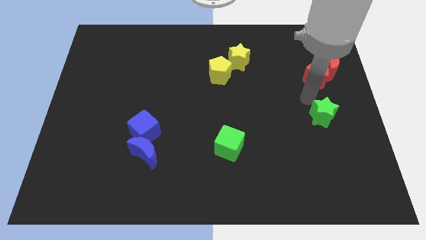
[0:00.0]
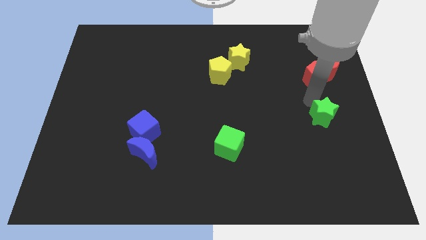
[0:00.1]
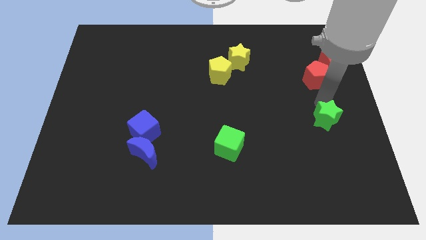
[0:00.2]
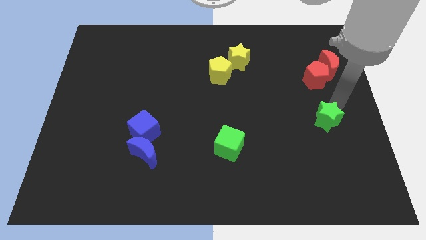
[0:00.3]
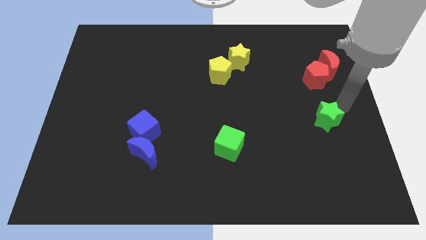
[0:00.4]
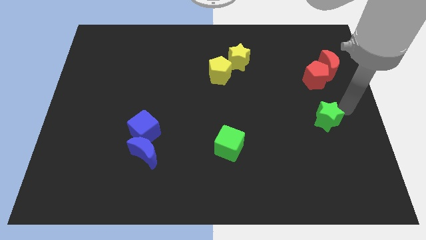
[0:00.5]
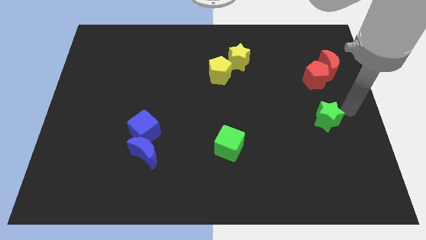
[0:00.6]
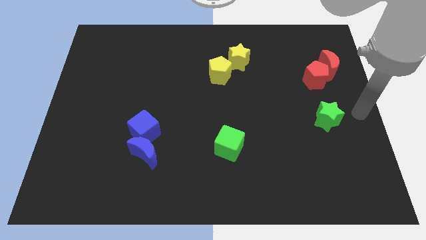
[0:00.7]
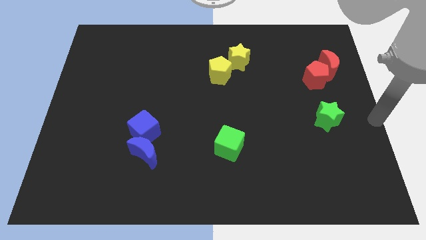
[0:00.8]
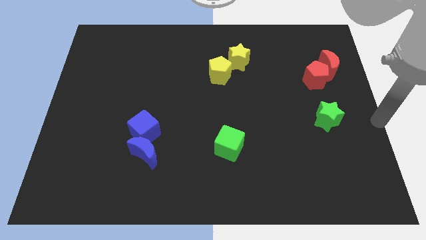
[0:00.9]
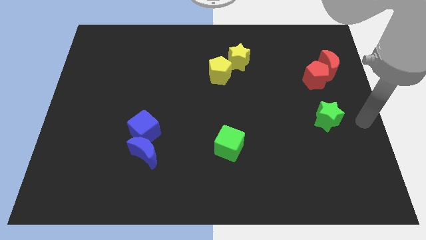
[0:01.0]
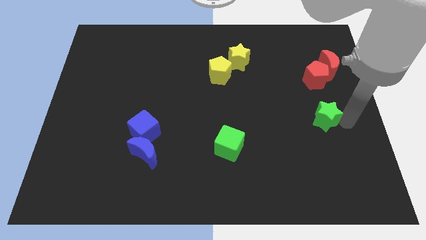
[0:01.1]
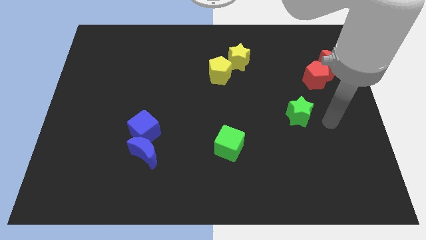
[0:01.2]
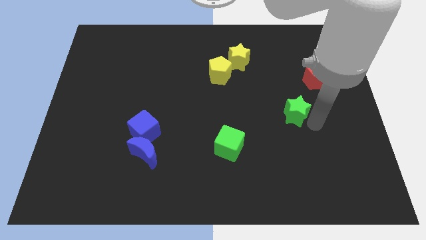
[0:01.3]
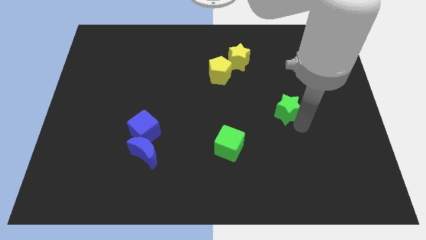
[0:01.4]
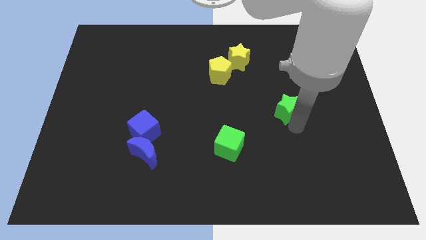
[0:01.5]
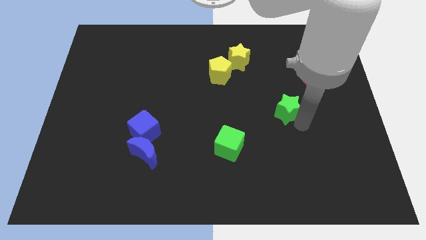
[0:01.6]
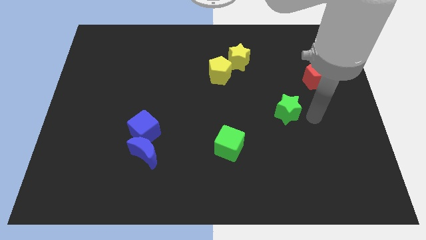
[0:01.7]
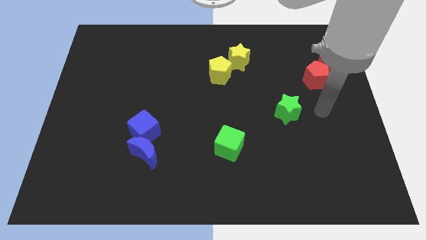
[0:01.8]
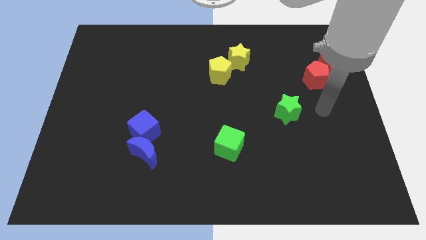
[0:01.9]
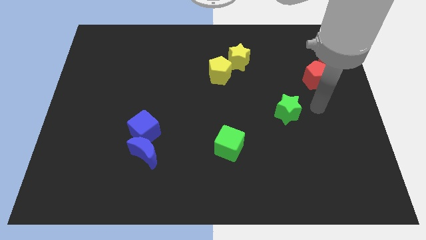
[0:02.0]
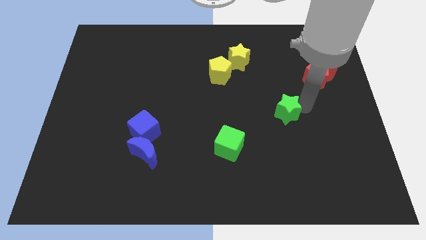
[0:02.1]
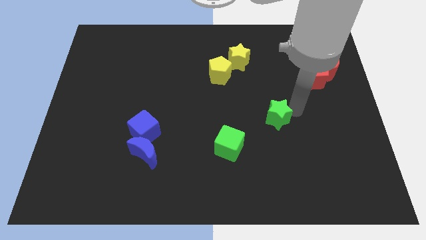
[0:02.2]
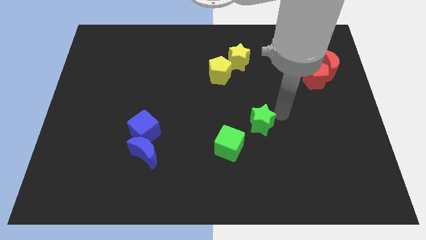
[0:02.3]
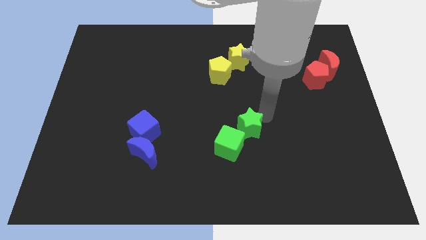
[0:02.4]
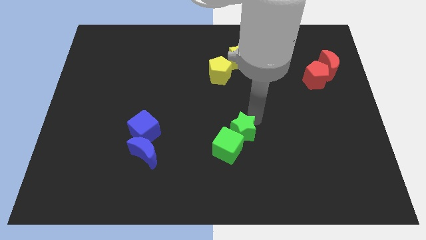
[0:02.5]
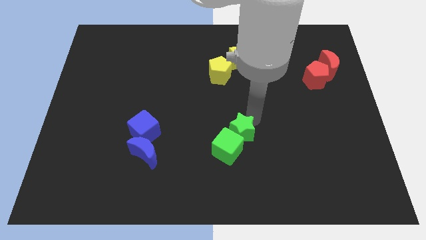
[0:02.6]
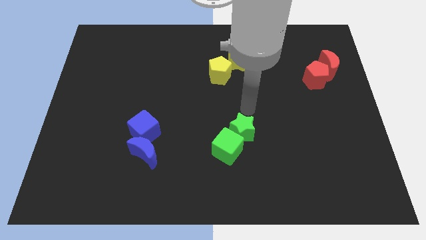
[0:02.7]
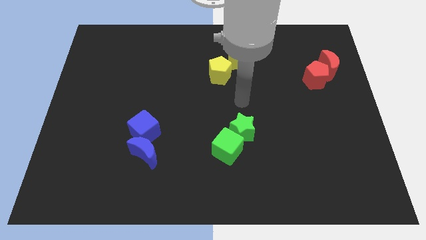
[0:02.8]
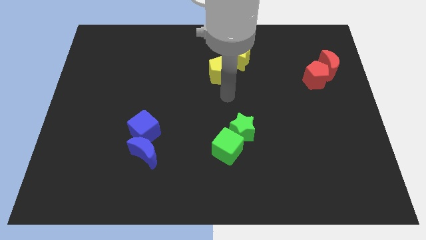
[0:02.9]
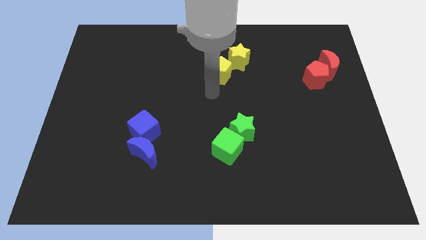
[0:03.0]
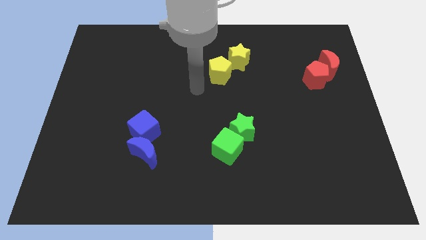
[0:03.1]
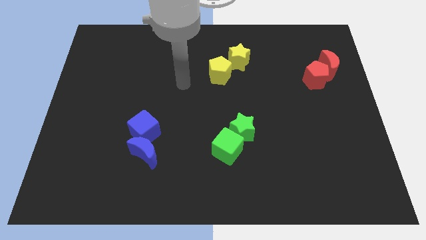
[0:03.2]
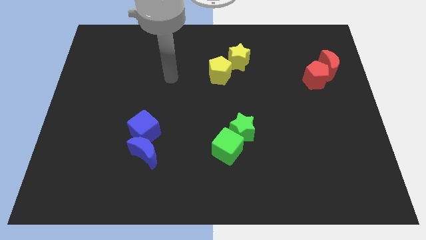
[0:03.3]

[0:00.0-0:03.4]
push the green star into green cube

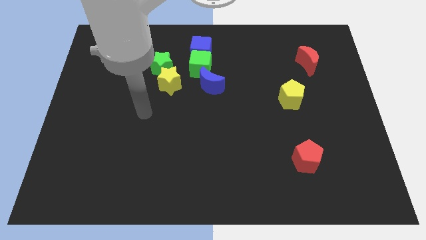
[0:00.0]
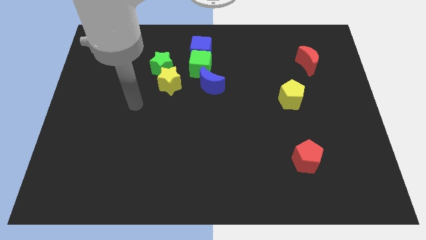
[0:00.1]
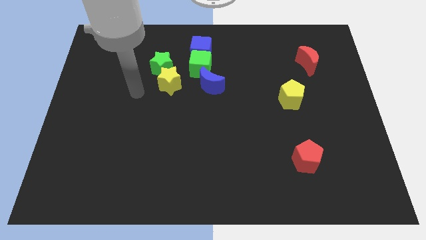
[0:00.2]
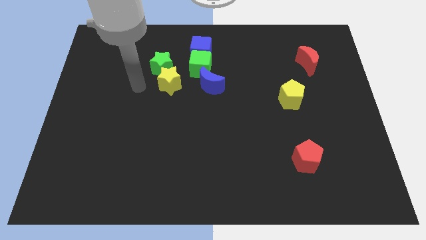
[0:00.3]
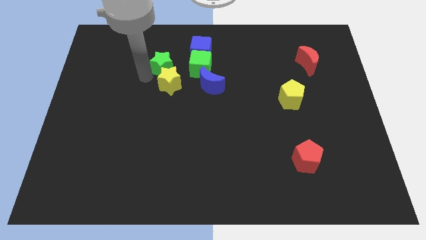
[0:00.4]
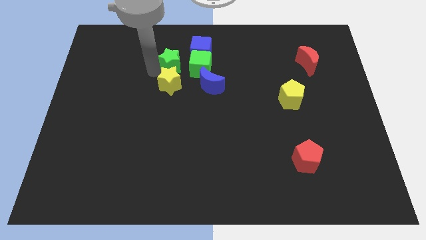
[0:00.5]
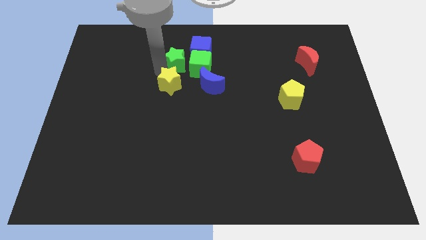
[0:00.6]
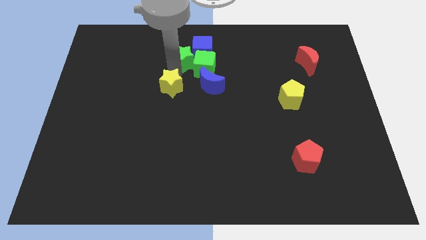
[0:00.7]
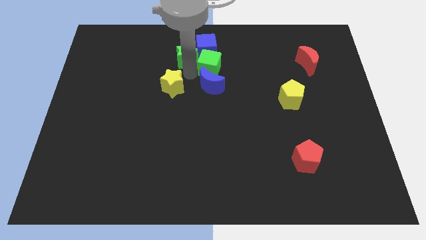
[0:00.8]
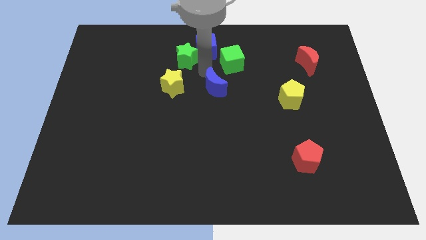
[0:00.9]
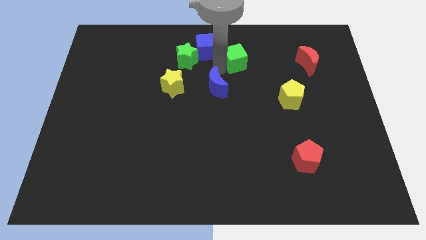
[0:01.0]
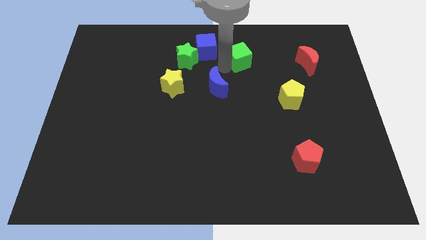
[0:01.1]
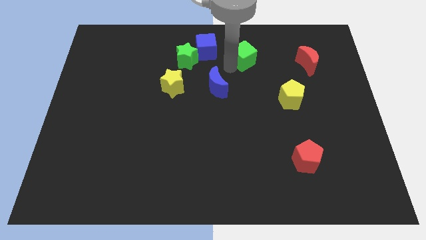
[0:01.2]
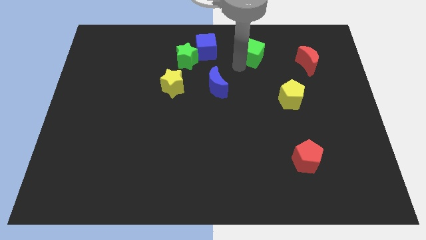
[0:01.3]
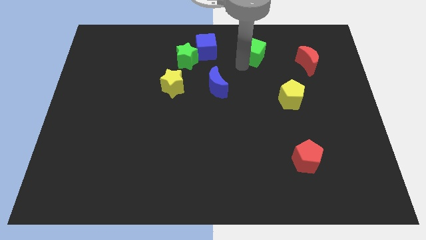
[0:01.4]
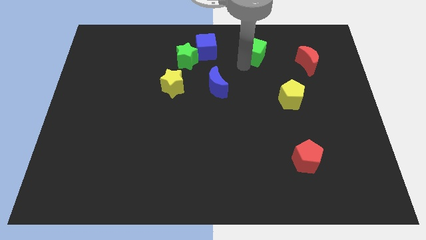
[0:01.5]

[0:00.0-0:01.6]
place the green cube between the blue cube and red moon

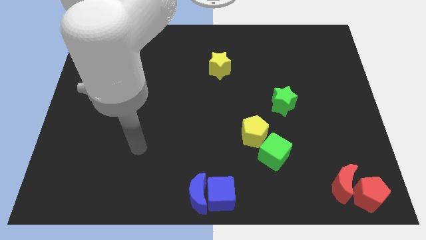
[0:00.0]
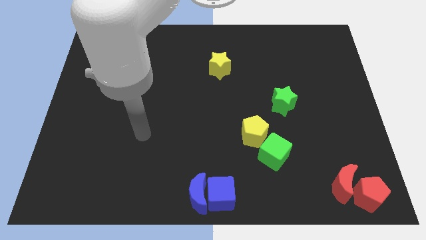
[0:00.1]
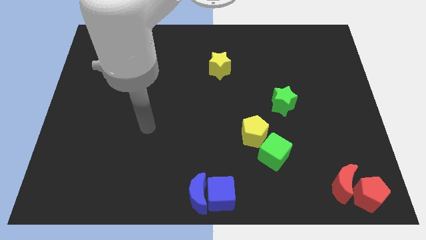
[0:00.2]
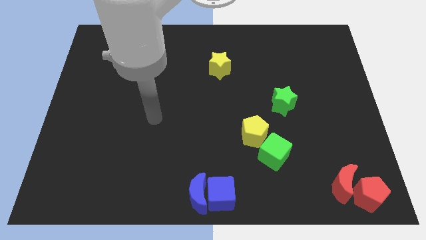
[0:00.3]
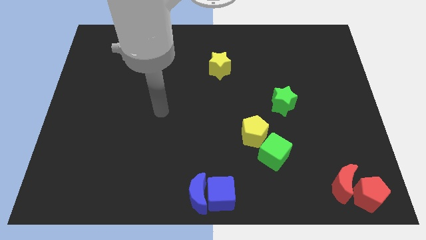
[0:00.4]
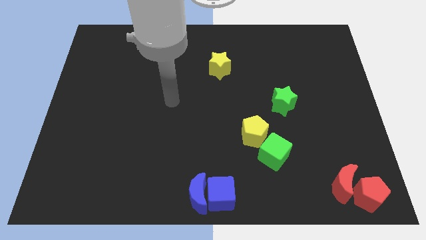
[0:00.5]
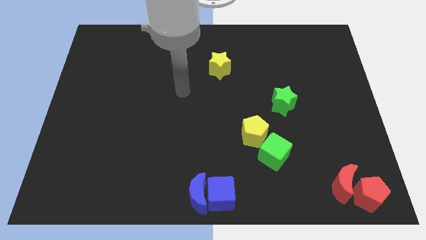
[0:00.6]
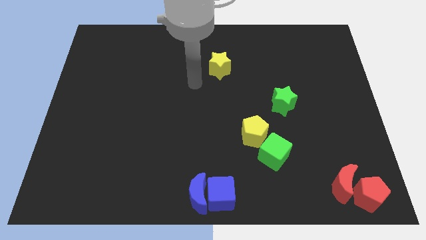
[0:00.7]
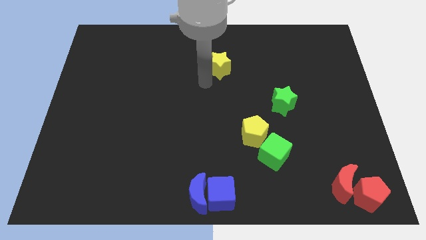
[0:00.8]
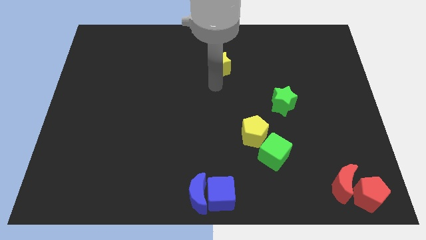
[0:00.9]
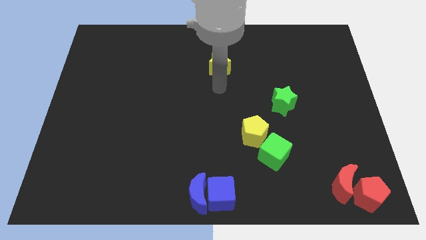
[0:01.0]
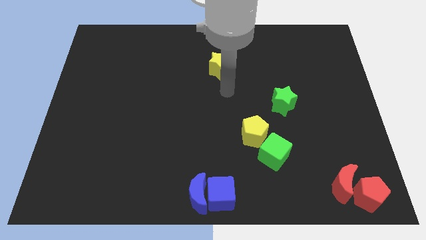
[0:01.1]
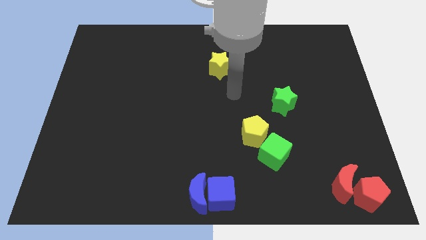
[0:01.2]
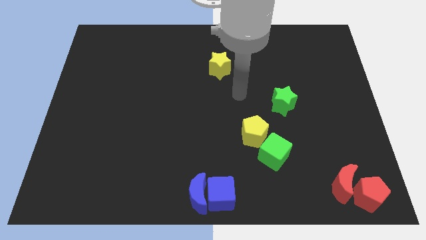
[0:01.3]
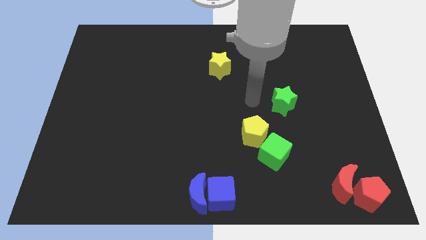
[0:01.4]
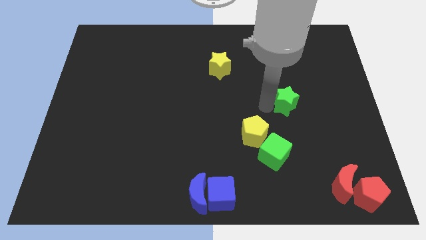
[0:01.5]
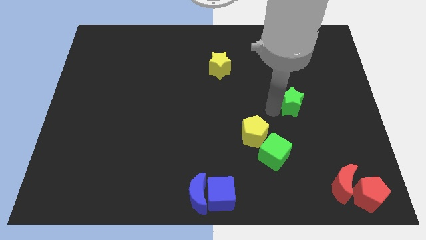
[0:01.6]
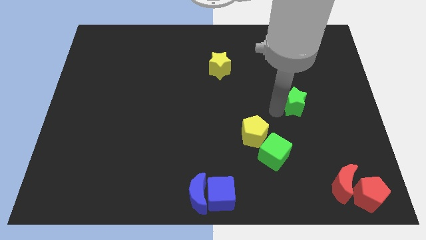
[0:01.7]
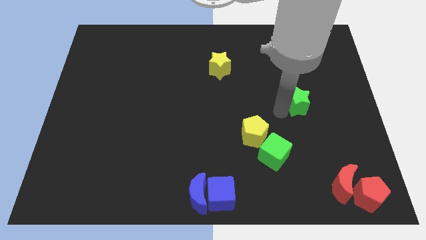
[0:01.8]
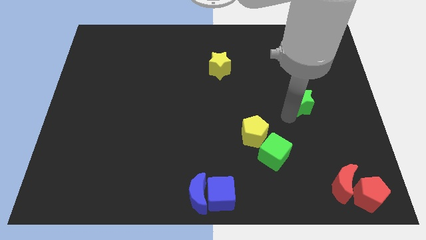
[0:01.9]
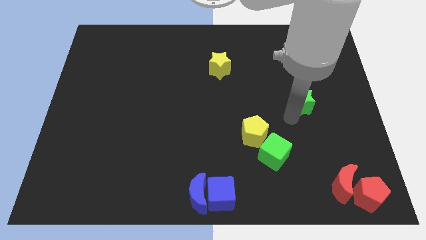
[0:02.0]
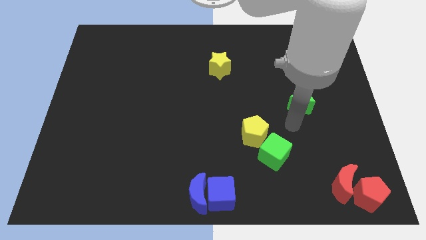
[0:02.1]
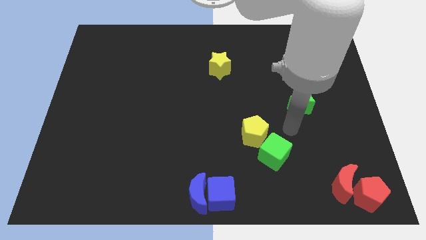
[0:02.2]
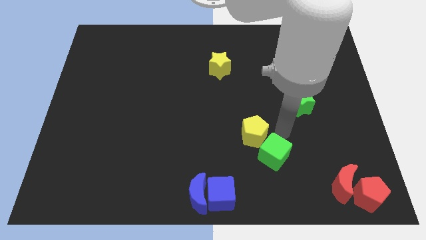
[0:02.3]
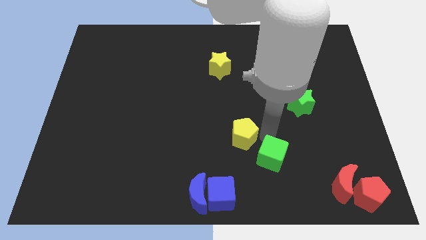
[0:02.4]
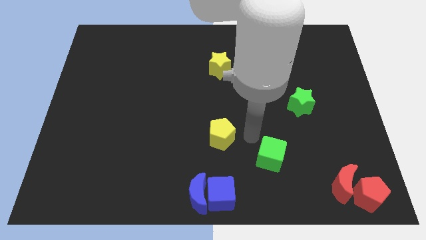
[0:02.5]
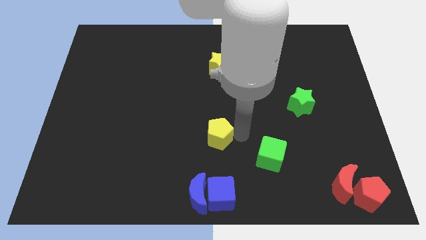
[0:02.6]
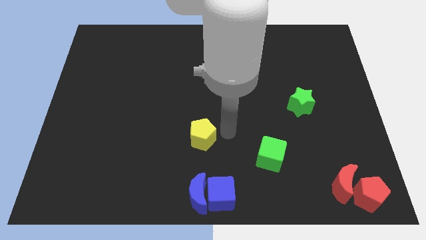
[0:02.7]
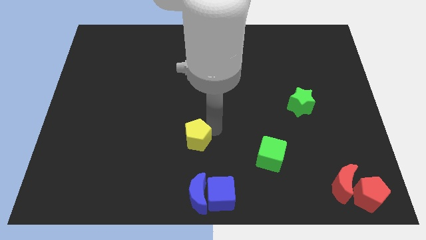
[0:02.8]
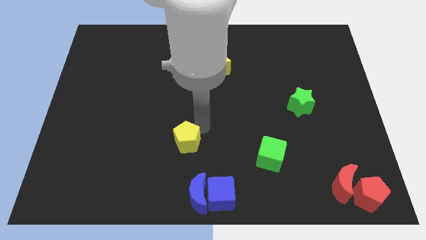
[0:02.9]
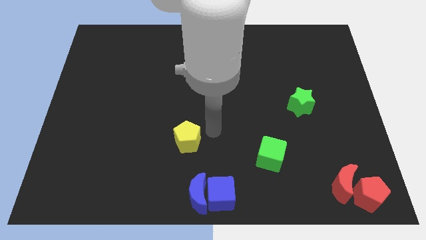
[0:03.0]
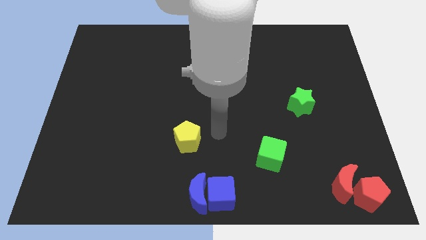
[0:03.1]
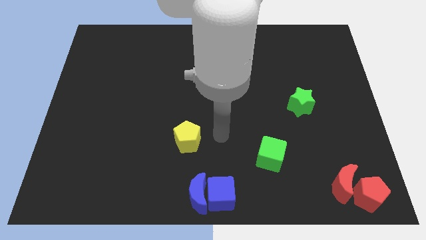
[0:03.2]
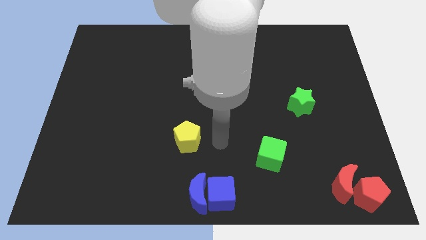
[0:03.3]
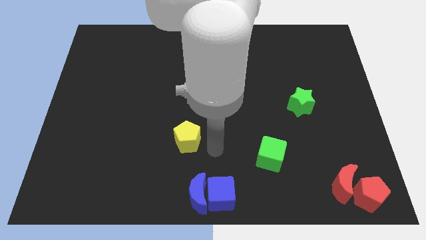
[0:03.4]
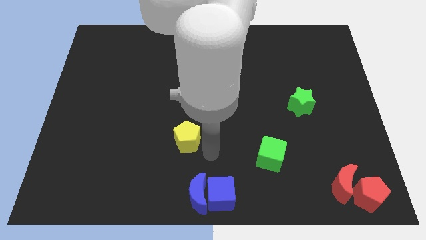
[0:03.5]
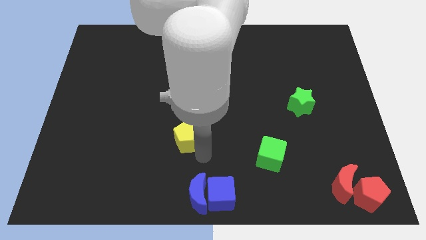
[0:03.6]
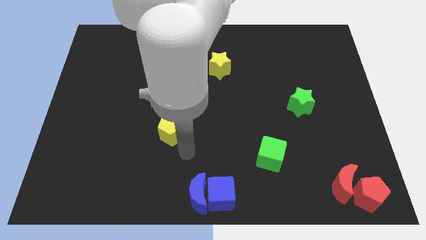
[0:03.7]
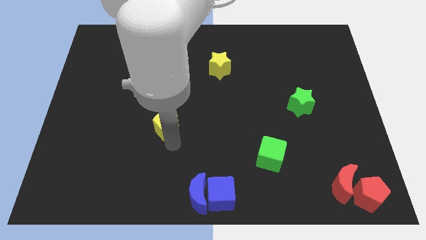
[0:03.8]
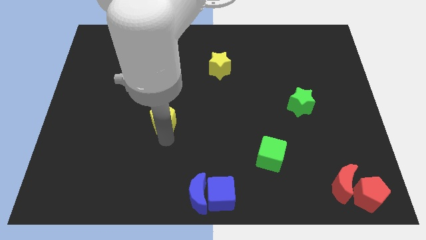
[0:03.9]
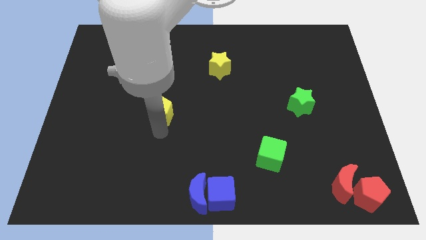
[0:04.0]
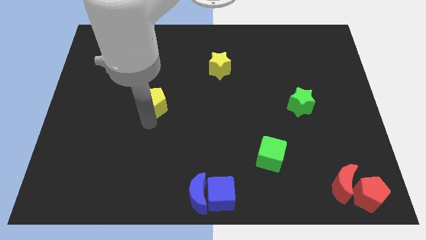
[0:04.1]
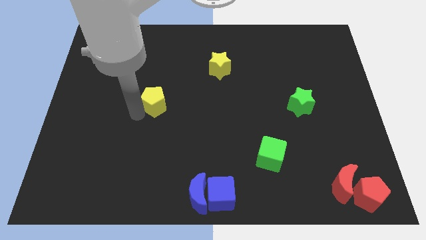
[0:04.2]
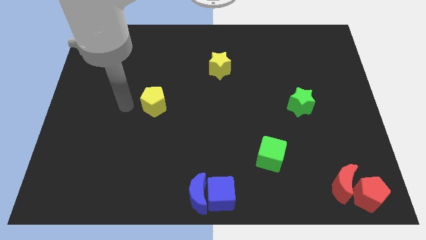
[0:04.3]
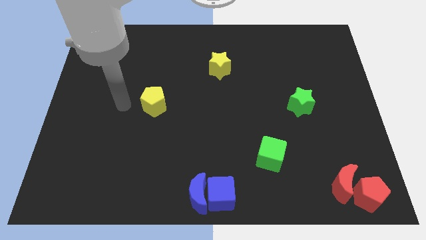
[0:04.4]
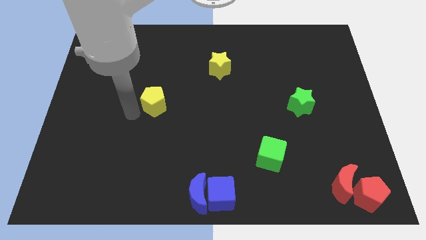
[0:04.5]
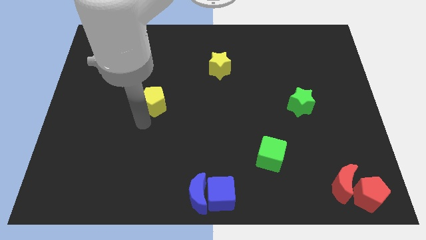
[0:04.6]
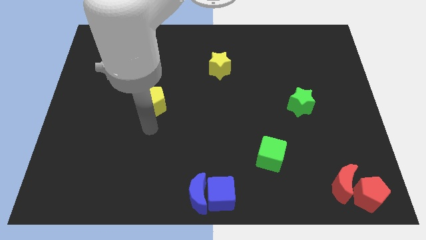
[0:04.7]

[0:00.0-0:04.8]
move yellow pentagon upwards
